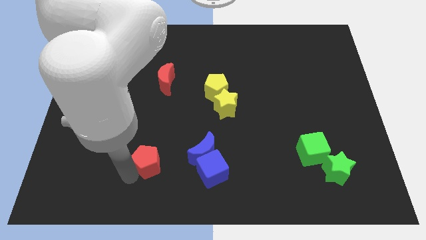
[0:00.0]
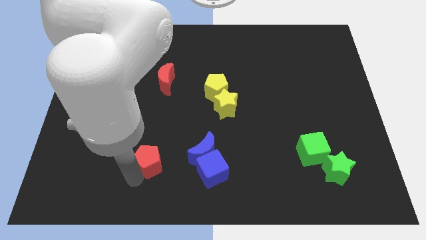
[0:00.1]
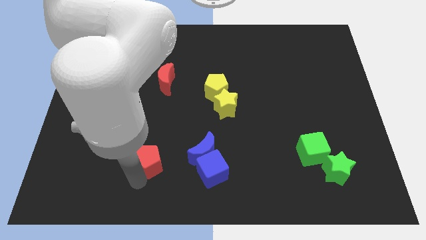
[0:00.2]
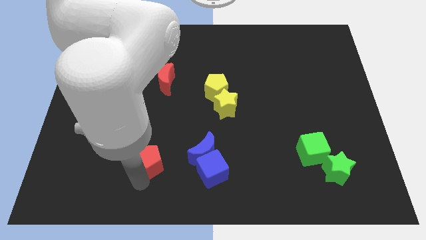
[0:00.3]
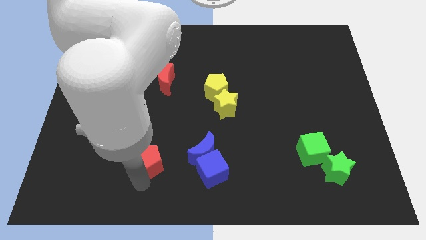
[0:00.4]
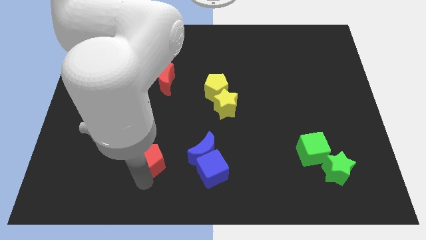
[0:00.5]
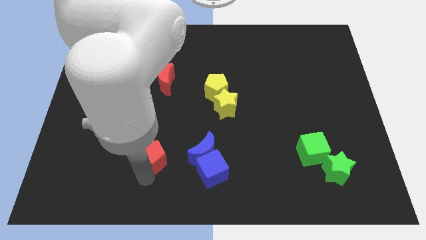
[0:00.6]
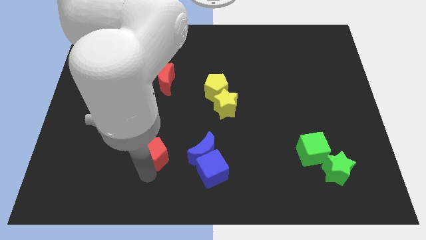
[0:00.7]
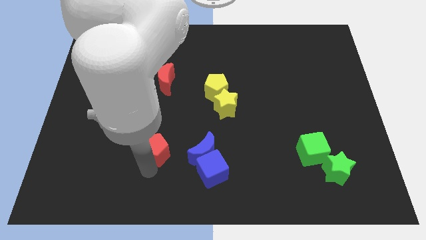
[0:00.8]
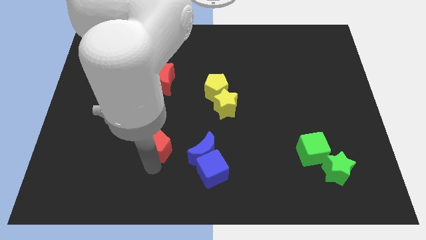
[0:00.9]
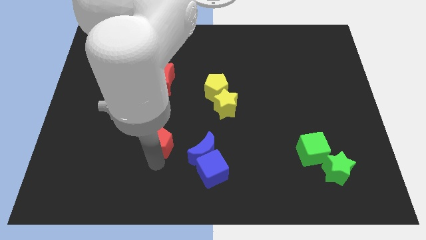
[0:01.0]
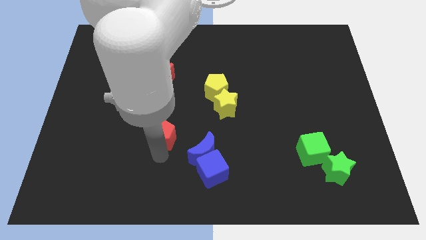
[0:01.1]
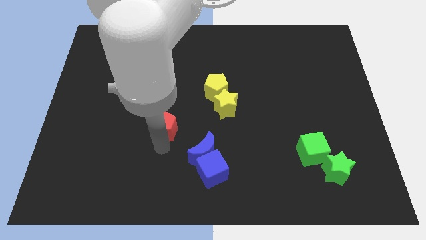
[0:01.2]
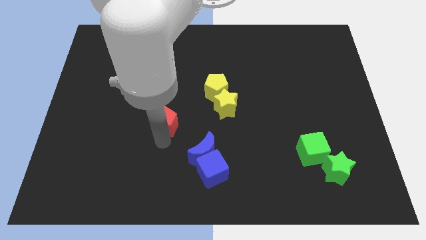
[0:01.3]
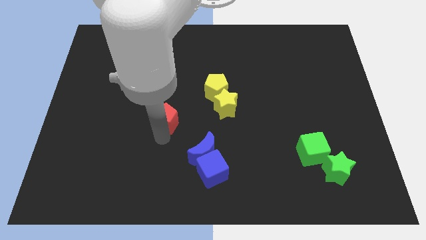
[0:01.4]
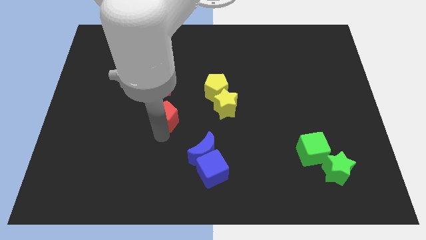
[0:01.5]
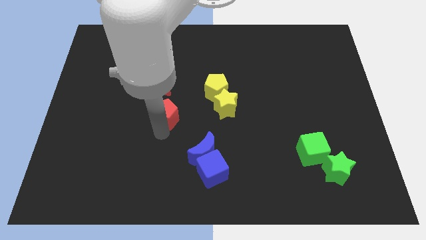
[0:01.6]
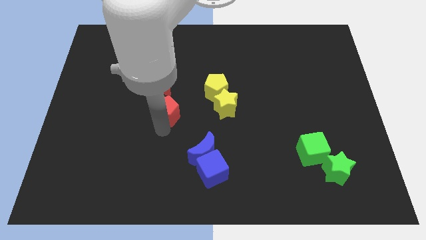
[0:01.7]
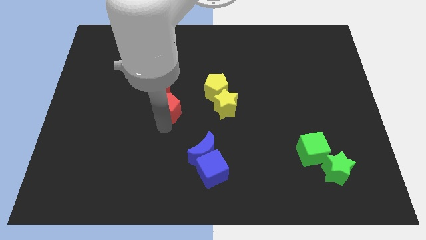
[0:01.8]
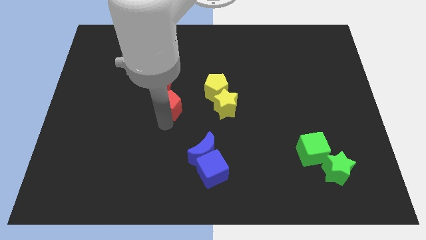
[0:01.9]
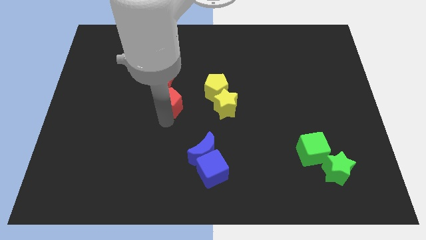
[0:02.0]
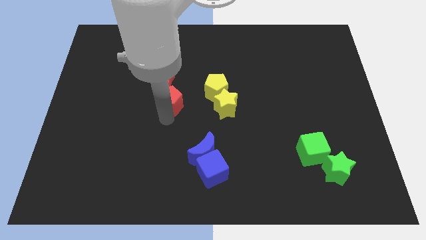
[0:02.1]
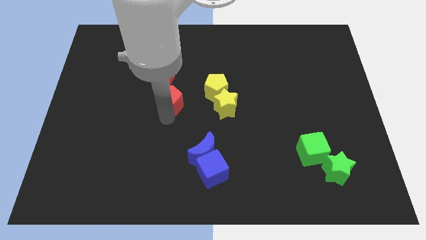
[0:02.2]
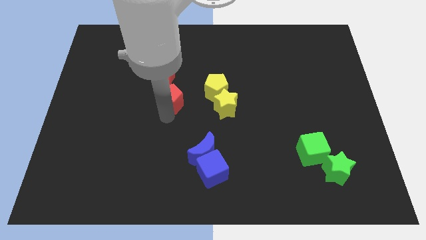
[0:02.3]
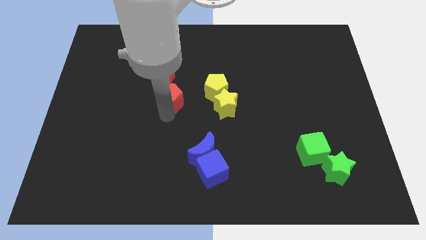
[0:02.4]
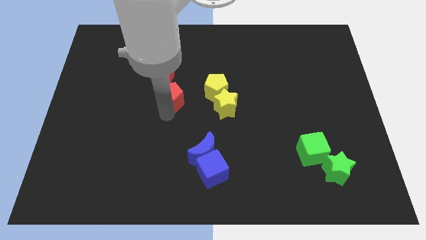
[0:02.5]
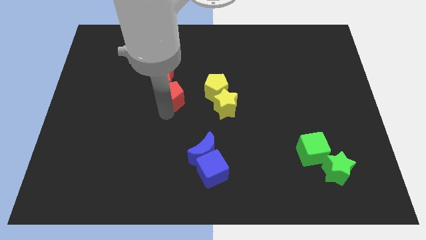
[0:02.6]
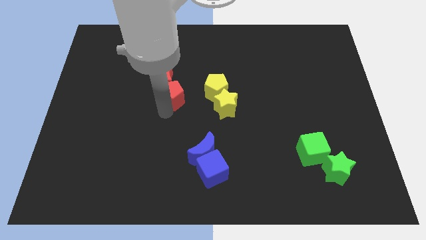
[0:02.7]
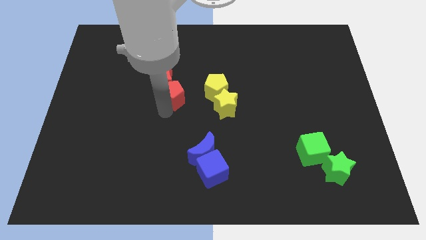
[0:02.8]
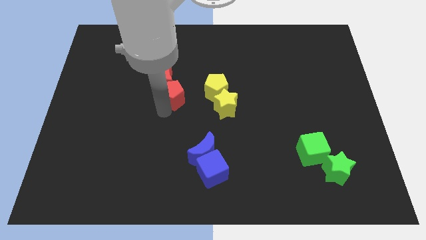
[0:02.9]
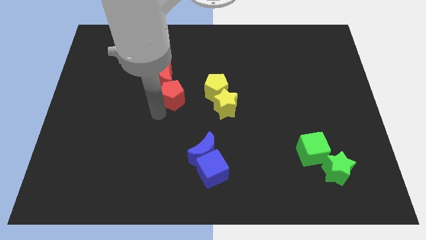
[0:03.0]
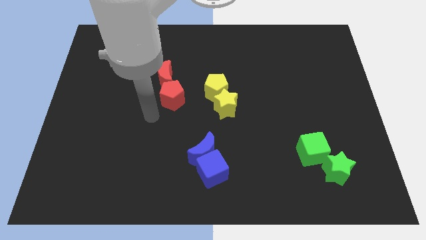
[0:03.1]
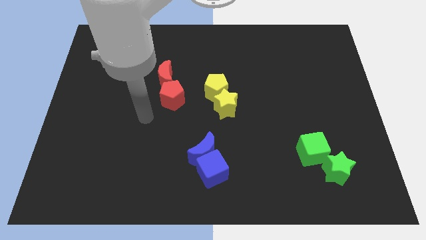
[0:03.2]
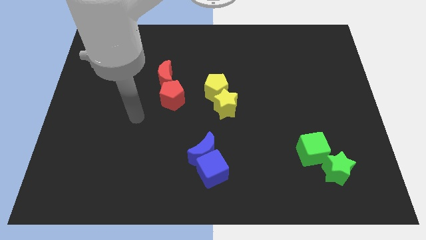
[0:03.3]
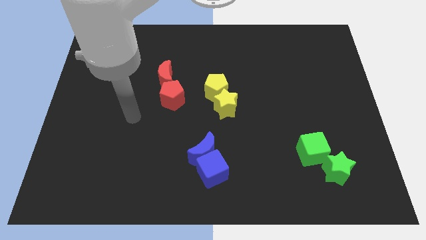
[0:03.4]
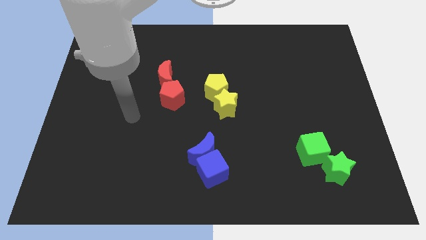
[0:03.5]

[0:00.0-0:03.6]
place red pentagon below the red crescent

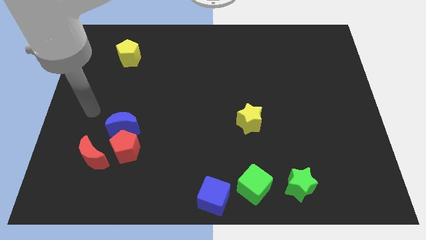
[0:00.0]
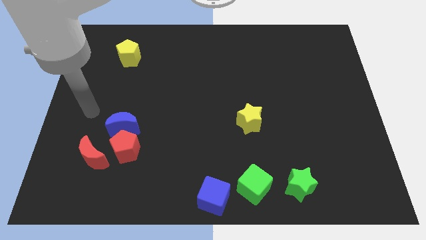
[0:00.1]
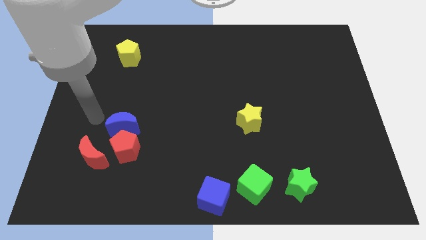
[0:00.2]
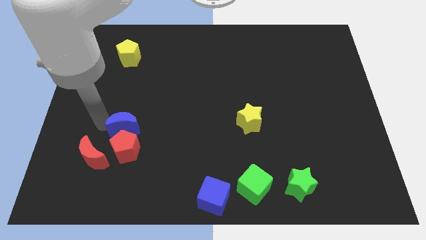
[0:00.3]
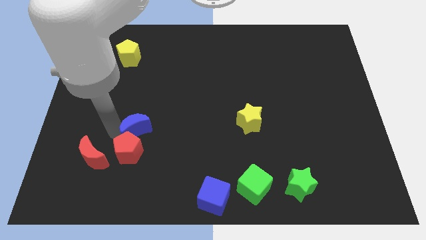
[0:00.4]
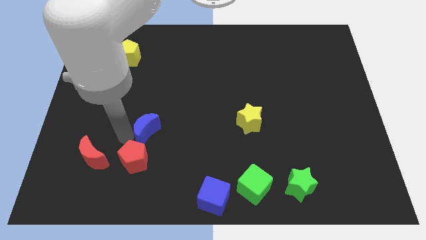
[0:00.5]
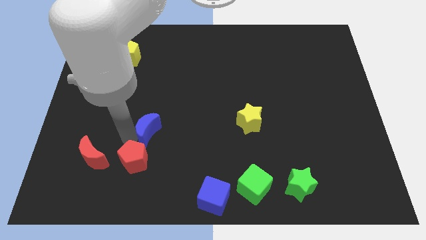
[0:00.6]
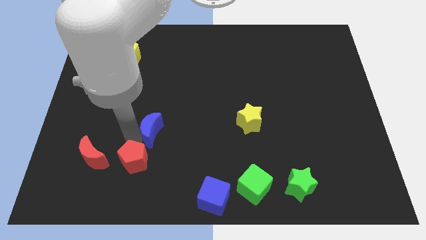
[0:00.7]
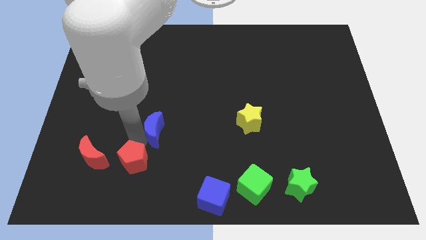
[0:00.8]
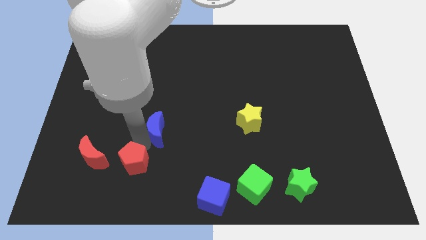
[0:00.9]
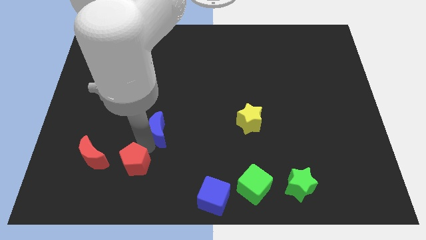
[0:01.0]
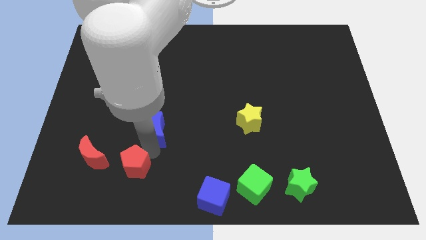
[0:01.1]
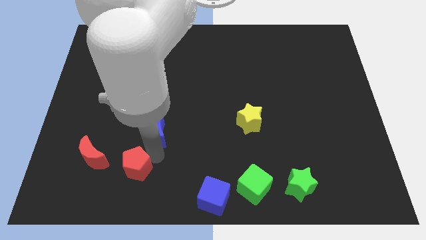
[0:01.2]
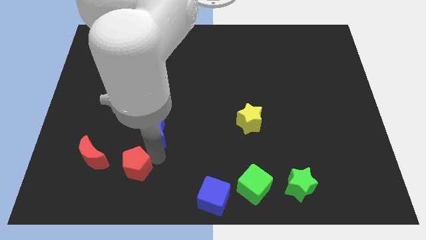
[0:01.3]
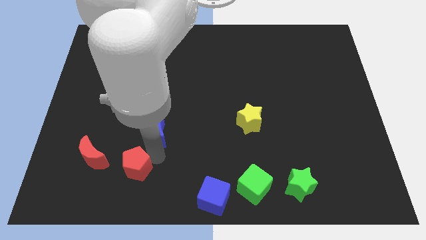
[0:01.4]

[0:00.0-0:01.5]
separate the blue moon and red pentagon from each other

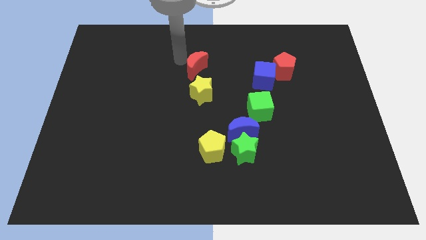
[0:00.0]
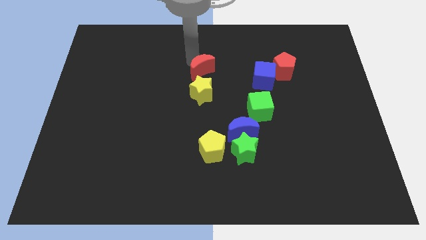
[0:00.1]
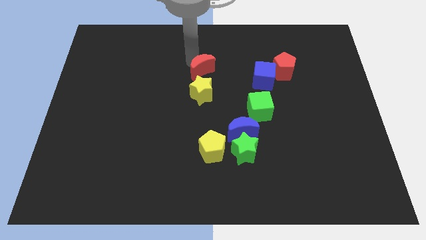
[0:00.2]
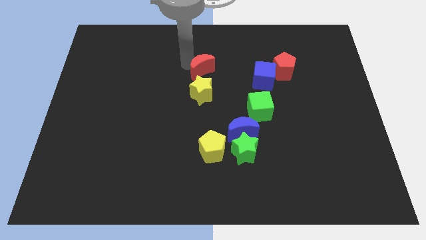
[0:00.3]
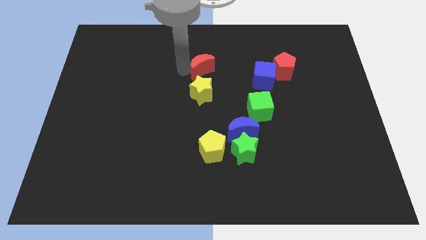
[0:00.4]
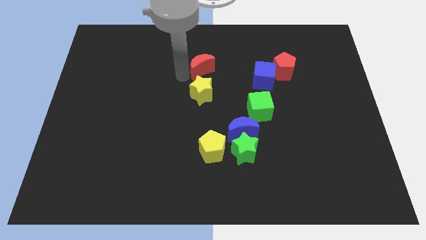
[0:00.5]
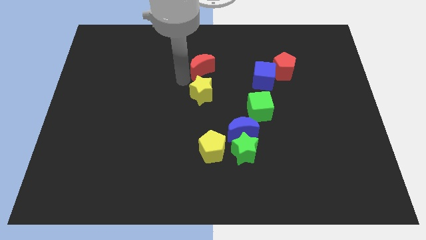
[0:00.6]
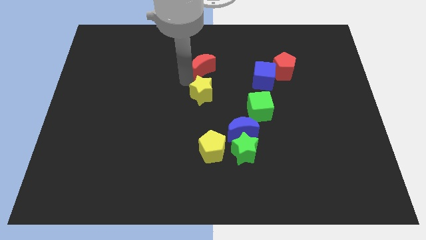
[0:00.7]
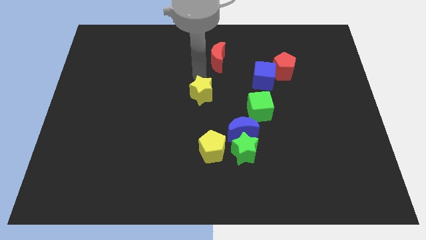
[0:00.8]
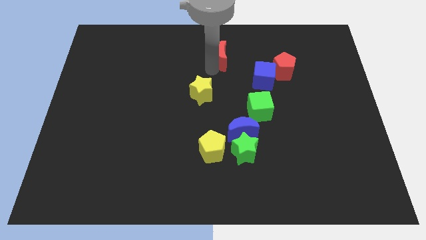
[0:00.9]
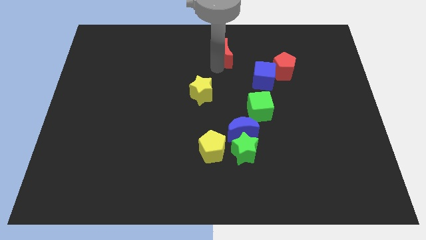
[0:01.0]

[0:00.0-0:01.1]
move the red crescent to the top right of the yellow star

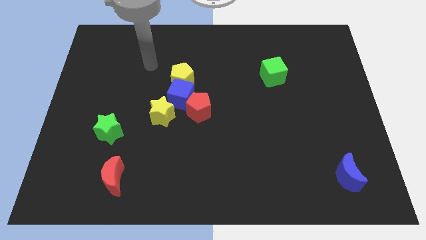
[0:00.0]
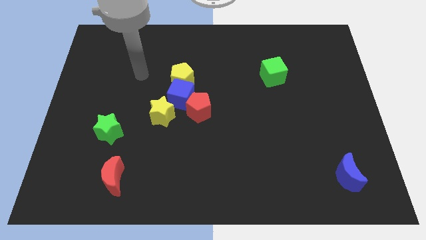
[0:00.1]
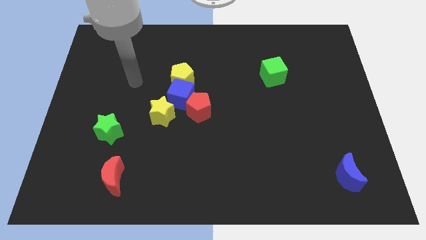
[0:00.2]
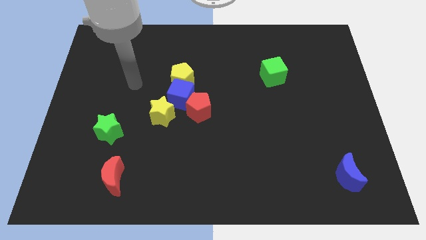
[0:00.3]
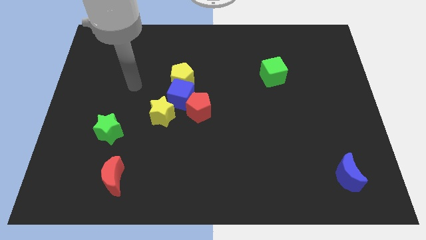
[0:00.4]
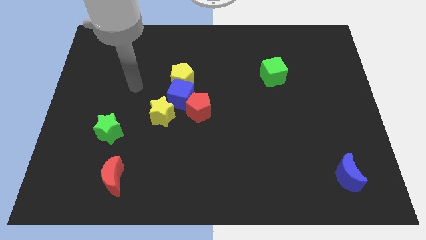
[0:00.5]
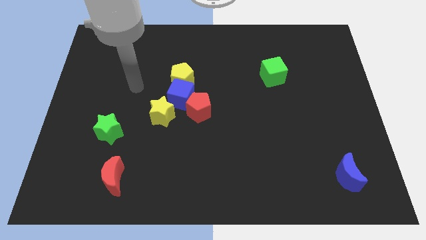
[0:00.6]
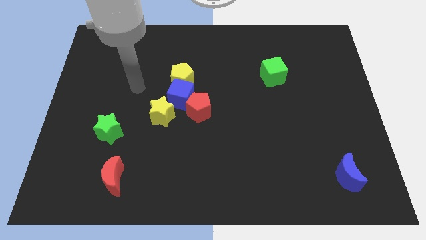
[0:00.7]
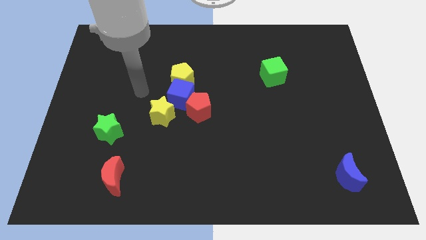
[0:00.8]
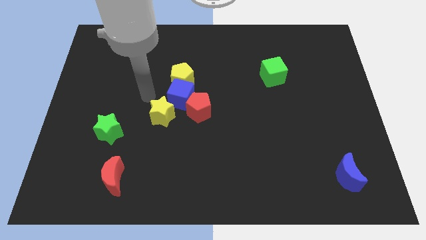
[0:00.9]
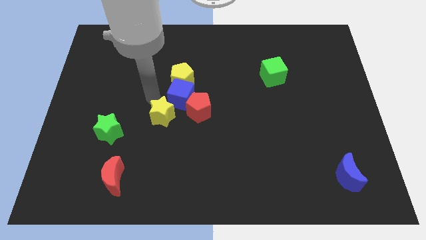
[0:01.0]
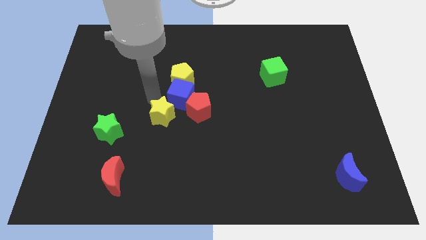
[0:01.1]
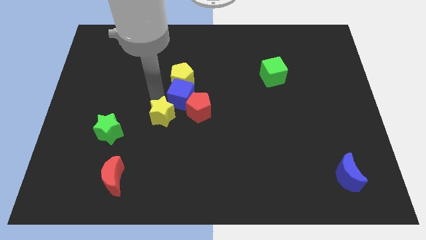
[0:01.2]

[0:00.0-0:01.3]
move the arm to the top of the yellow star

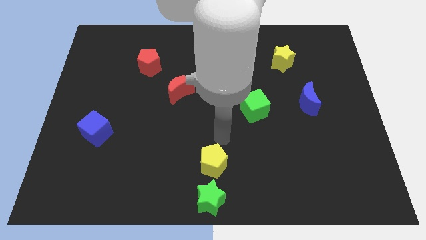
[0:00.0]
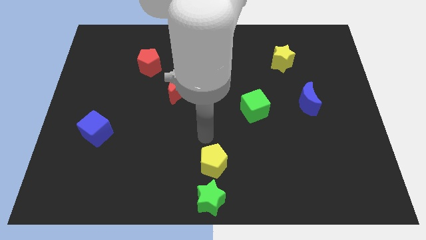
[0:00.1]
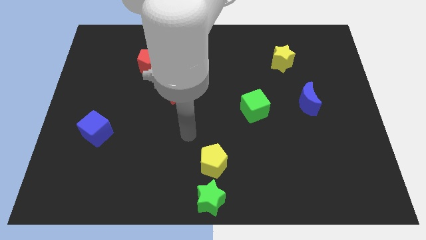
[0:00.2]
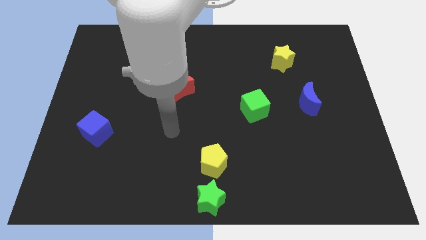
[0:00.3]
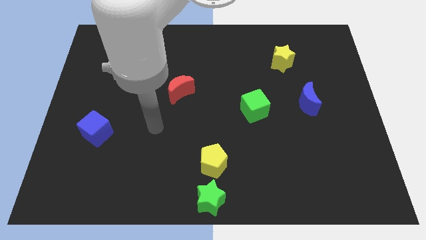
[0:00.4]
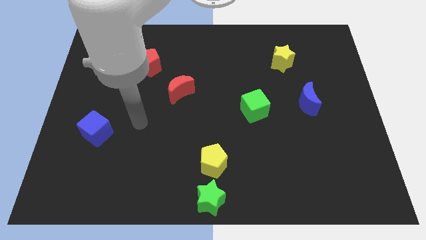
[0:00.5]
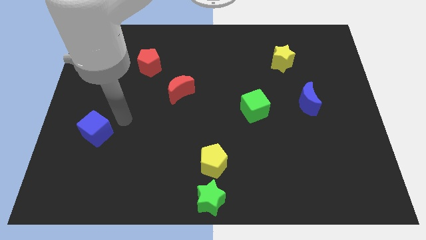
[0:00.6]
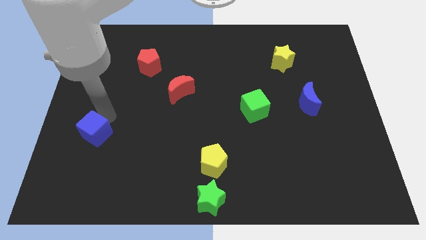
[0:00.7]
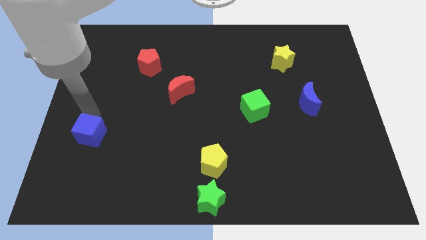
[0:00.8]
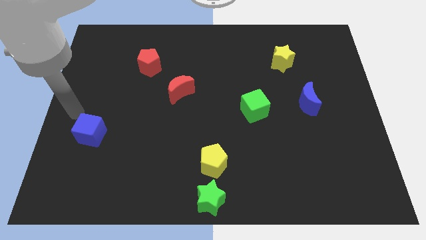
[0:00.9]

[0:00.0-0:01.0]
push the blue cube slightly to the left

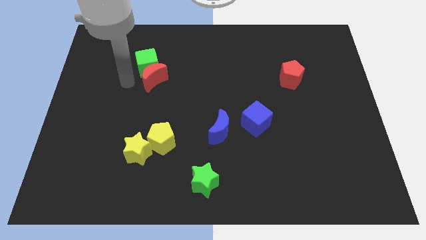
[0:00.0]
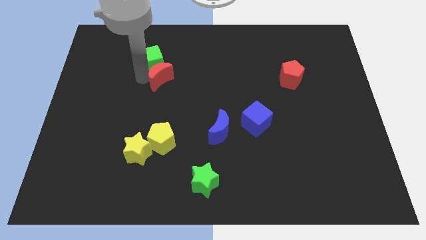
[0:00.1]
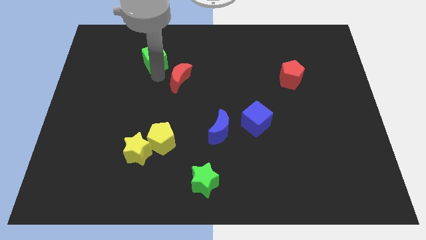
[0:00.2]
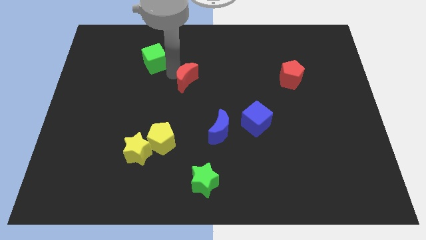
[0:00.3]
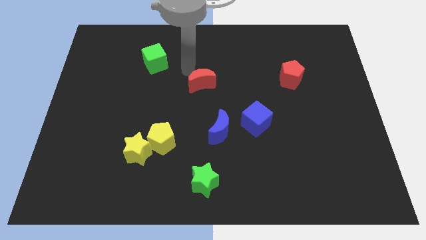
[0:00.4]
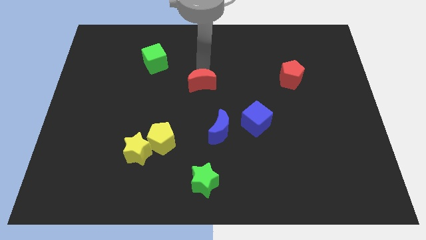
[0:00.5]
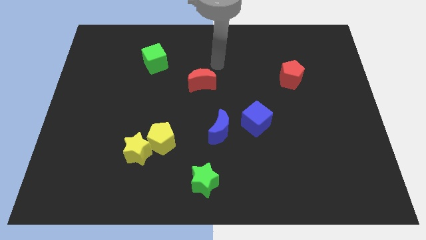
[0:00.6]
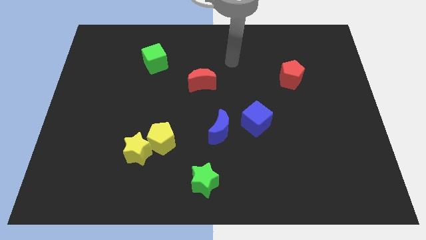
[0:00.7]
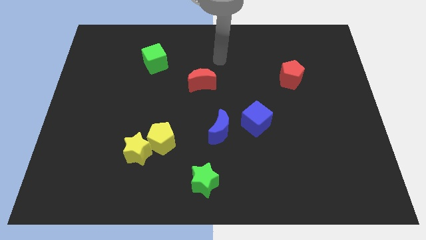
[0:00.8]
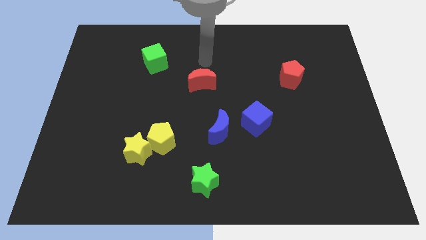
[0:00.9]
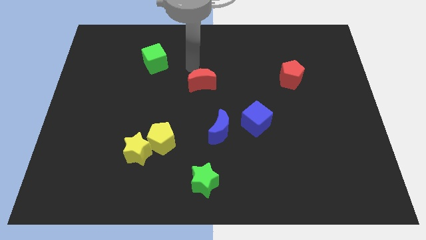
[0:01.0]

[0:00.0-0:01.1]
separate the red crescent and the green cube
